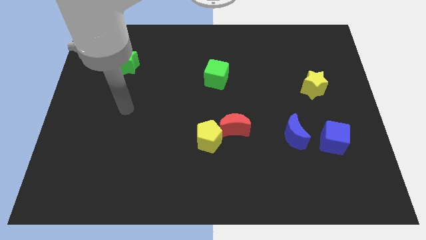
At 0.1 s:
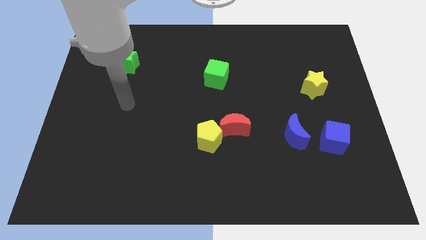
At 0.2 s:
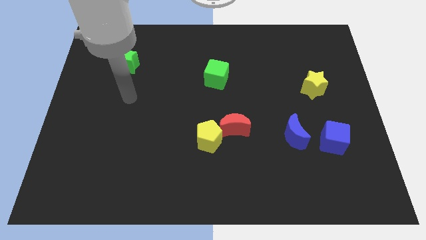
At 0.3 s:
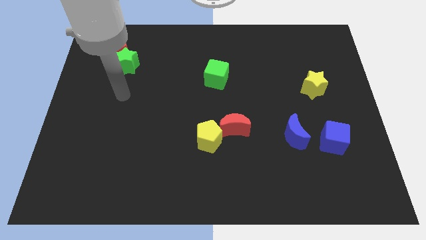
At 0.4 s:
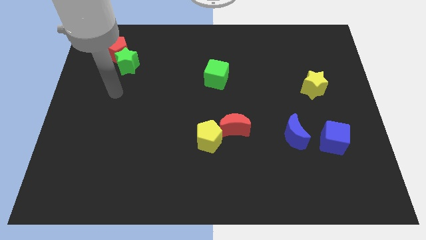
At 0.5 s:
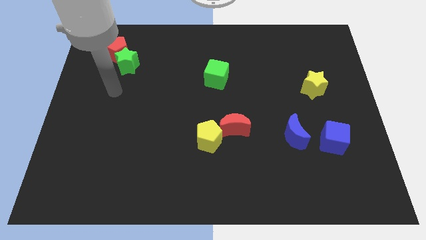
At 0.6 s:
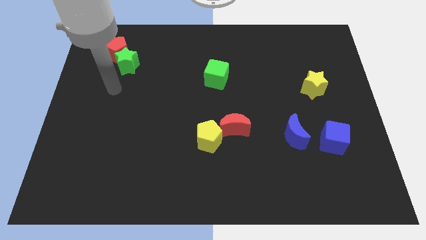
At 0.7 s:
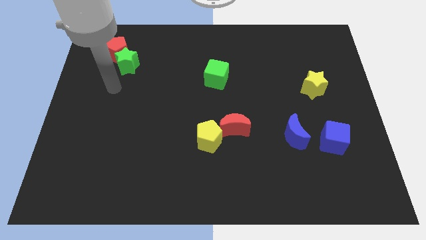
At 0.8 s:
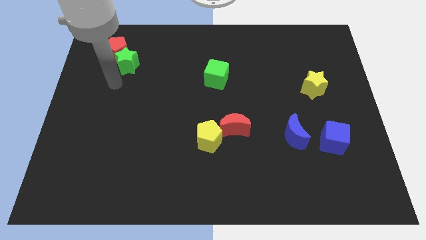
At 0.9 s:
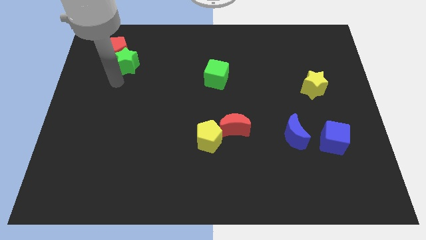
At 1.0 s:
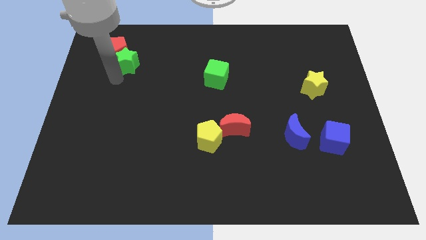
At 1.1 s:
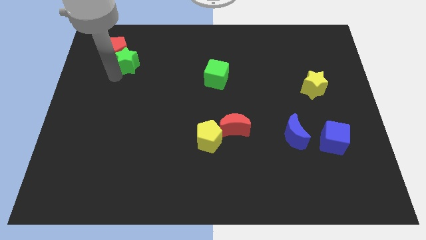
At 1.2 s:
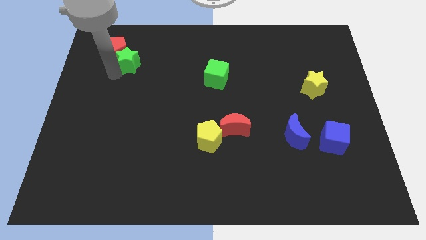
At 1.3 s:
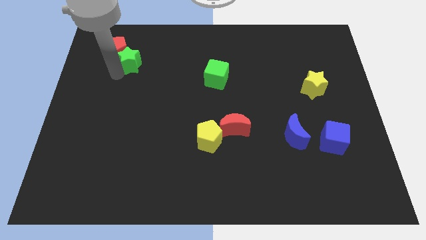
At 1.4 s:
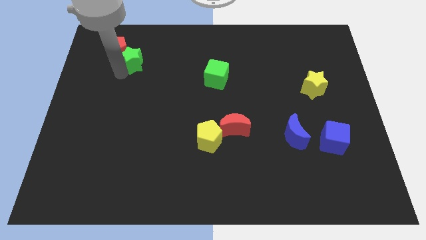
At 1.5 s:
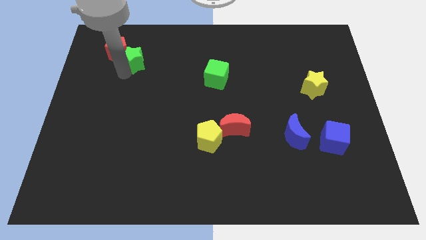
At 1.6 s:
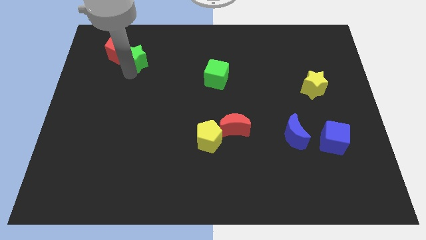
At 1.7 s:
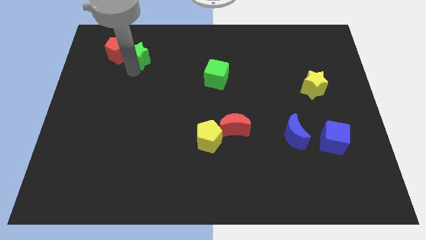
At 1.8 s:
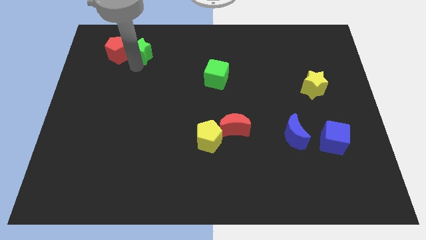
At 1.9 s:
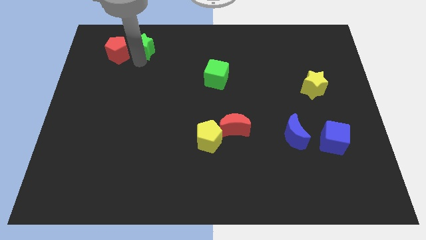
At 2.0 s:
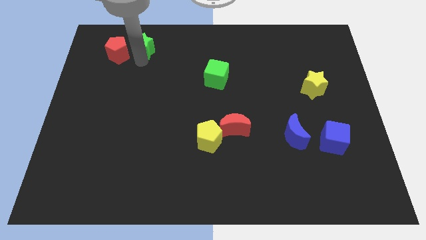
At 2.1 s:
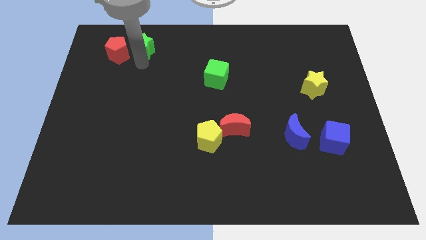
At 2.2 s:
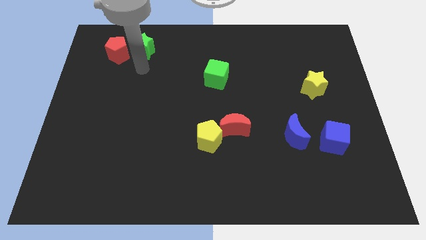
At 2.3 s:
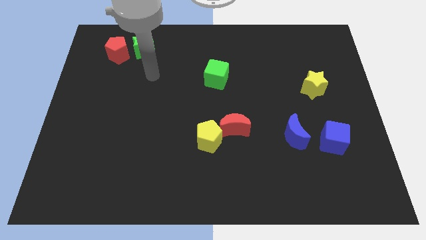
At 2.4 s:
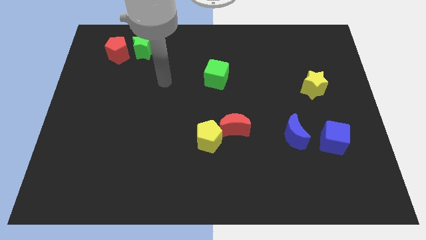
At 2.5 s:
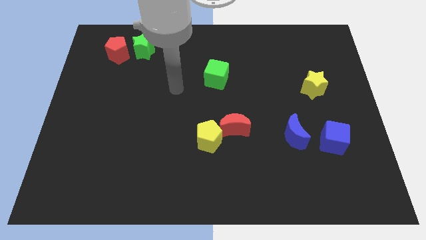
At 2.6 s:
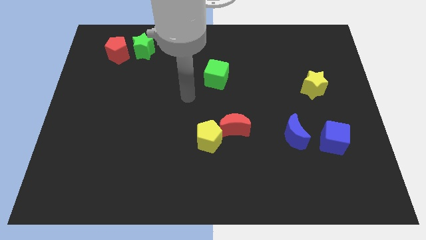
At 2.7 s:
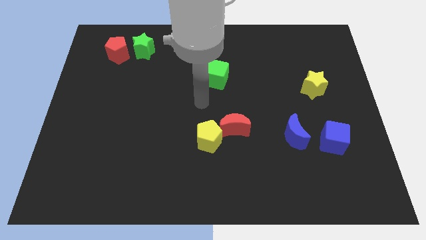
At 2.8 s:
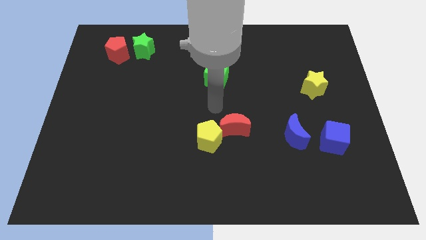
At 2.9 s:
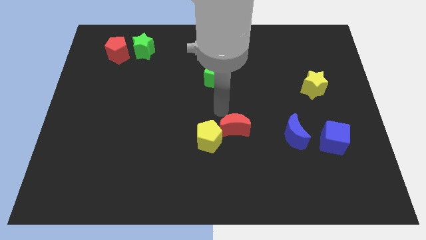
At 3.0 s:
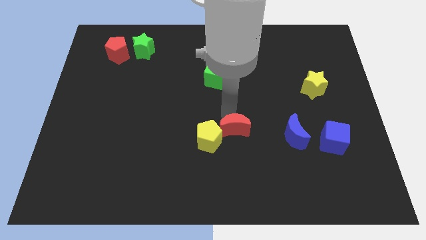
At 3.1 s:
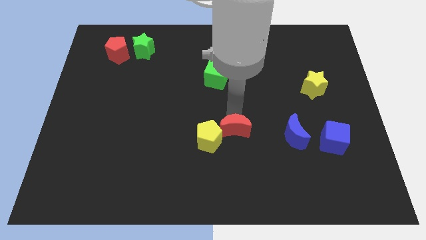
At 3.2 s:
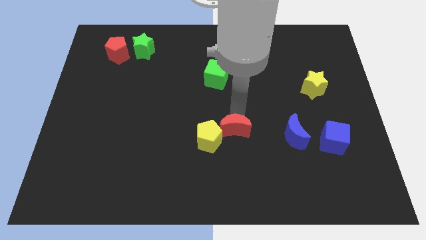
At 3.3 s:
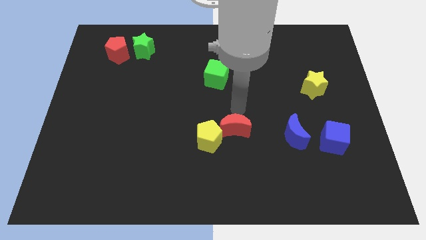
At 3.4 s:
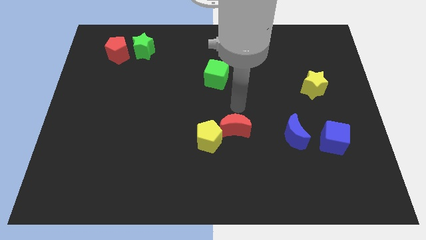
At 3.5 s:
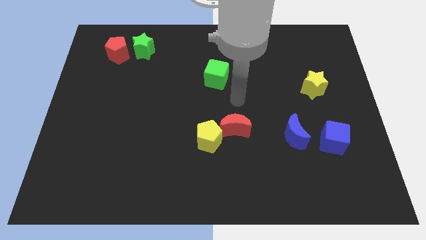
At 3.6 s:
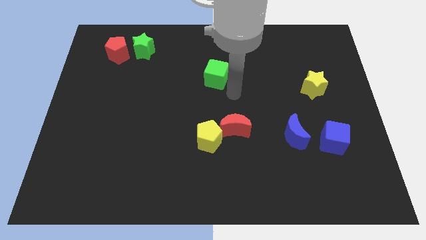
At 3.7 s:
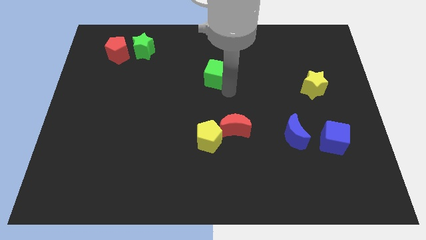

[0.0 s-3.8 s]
slide the green star towards the top of the board

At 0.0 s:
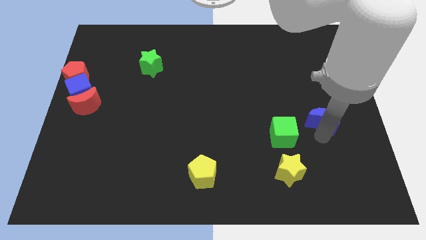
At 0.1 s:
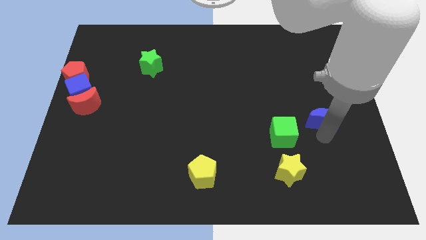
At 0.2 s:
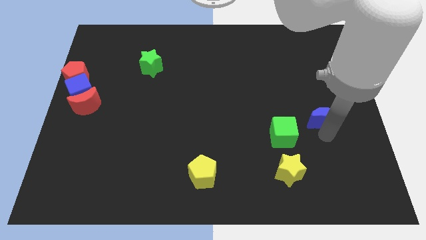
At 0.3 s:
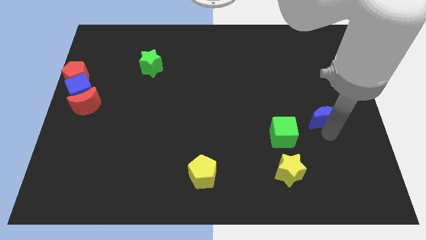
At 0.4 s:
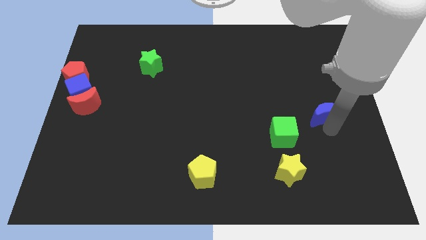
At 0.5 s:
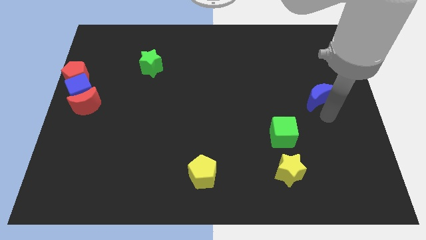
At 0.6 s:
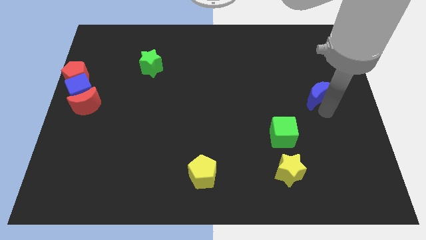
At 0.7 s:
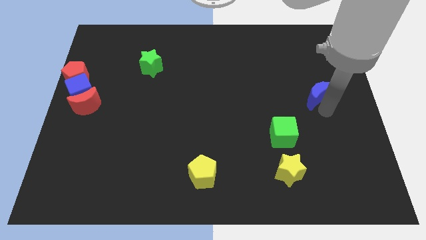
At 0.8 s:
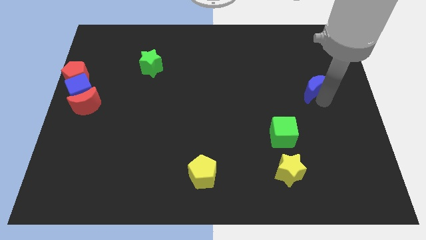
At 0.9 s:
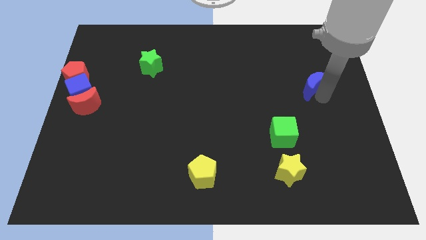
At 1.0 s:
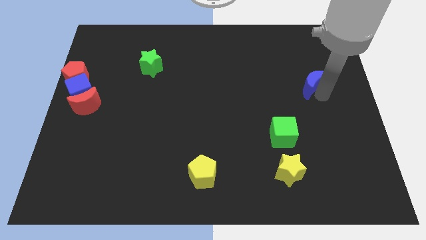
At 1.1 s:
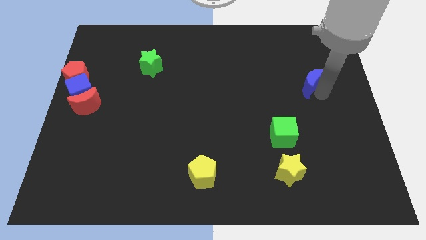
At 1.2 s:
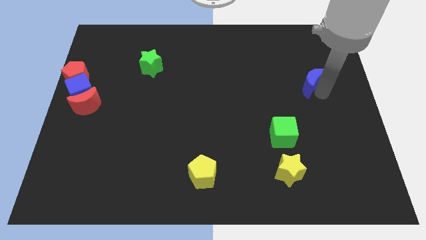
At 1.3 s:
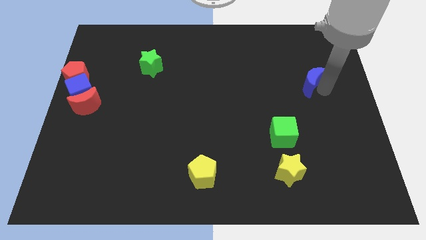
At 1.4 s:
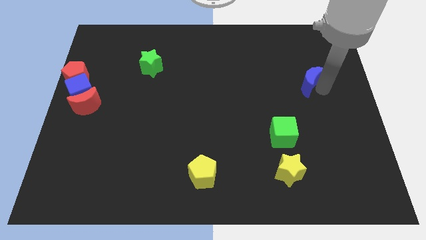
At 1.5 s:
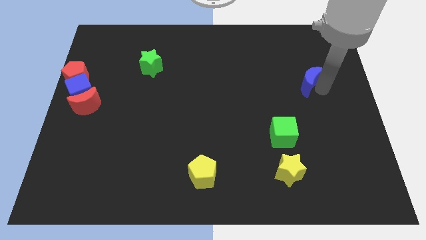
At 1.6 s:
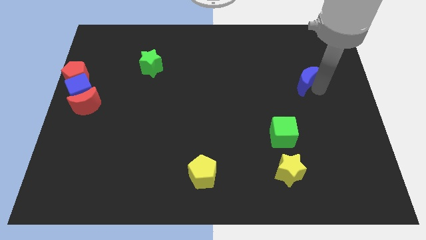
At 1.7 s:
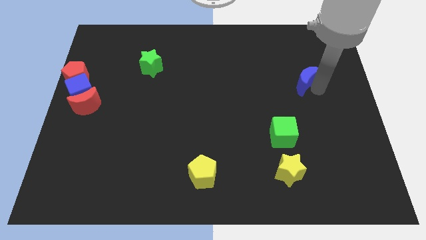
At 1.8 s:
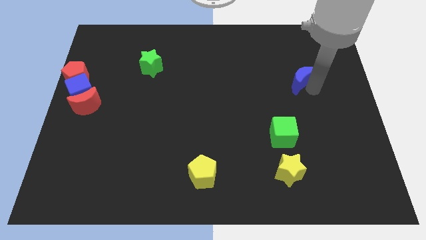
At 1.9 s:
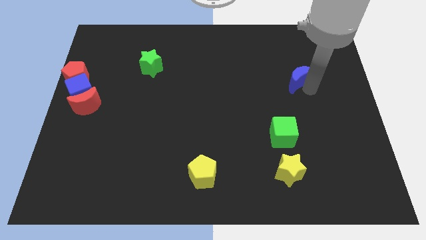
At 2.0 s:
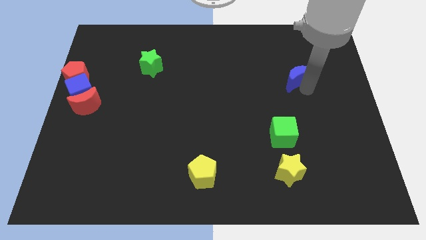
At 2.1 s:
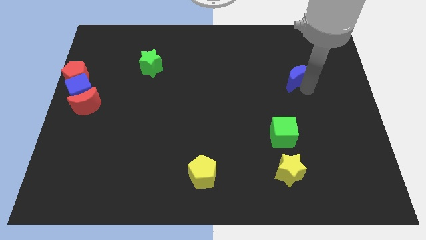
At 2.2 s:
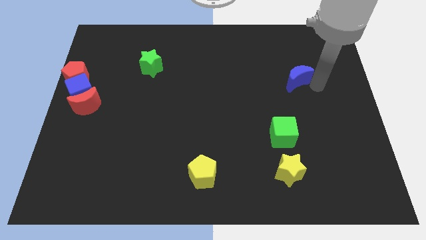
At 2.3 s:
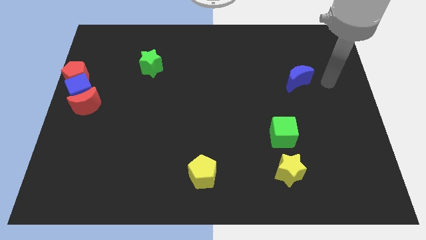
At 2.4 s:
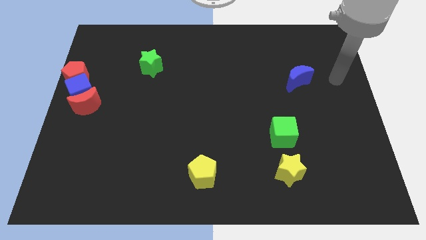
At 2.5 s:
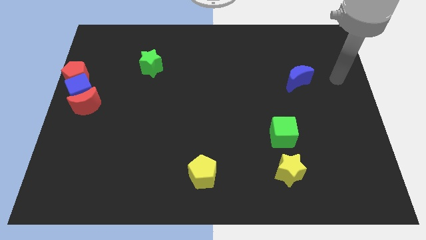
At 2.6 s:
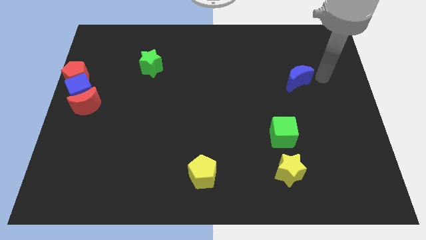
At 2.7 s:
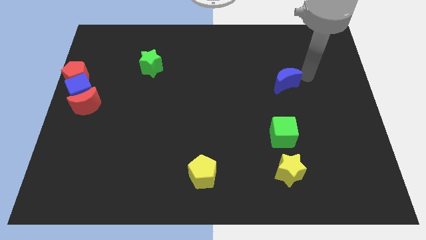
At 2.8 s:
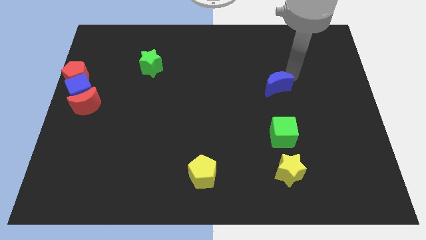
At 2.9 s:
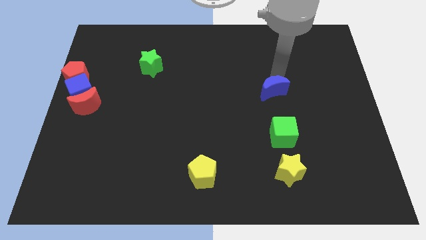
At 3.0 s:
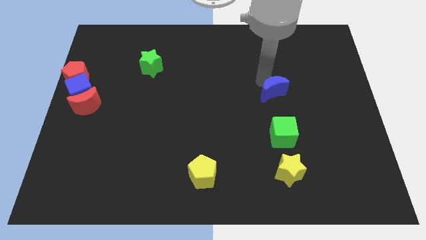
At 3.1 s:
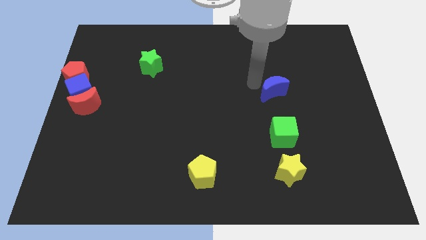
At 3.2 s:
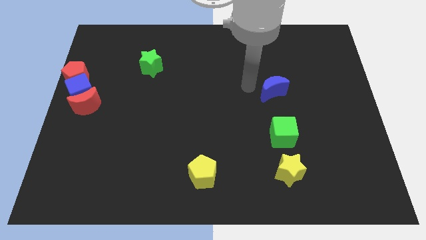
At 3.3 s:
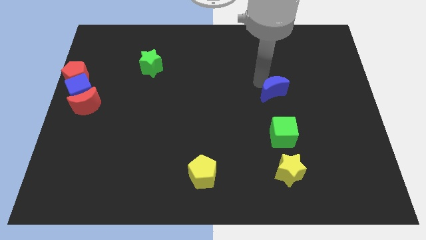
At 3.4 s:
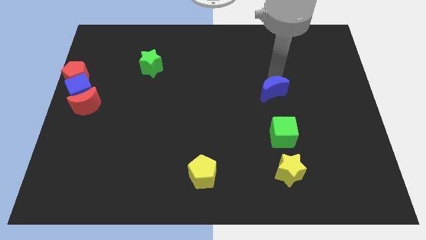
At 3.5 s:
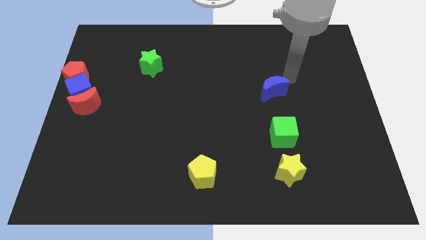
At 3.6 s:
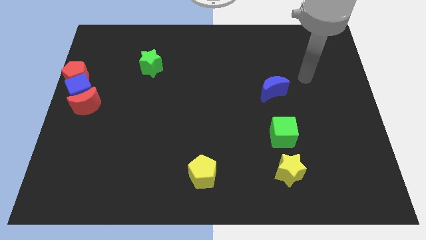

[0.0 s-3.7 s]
put the blue moon parallel to red moon

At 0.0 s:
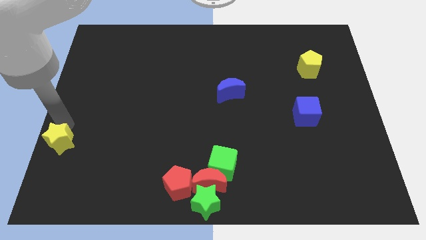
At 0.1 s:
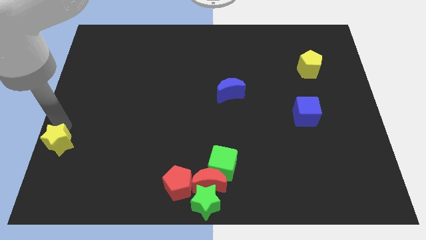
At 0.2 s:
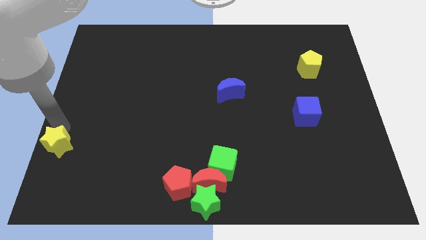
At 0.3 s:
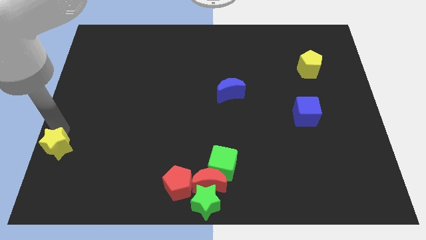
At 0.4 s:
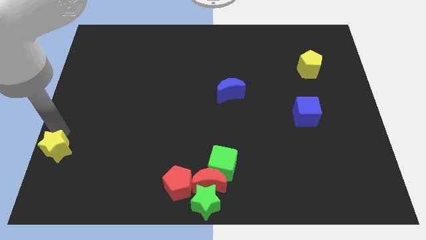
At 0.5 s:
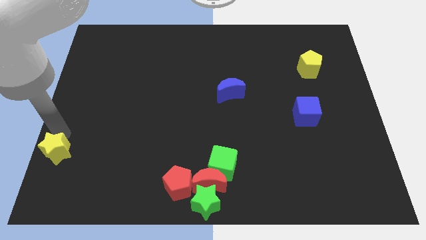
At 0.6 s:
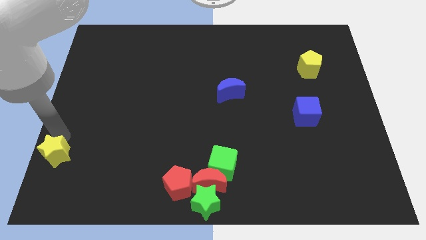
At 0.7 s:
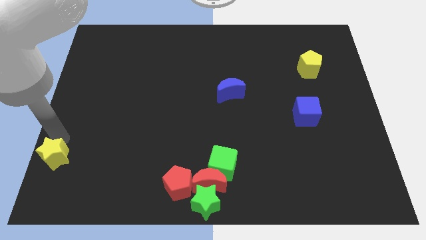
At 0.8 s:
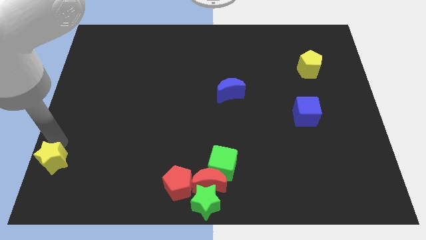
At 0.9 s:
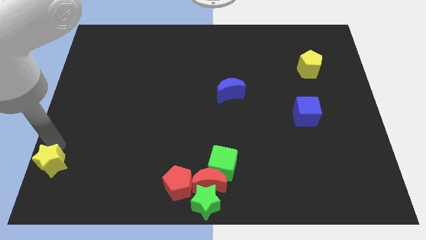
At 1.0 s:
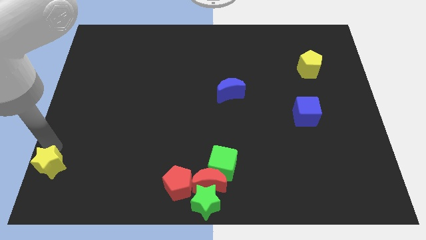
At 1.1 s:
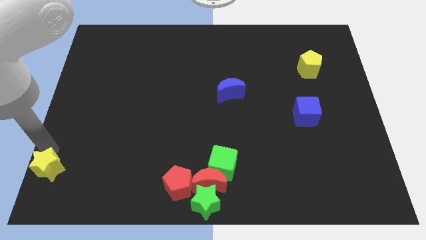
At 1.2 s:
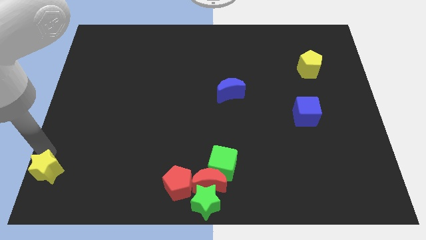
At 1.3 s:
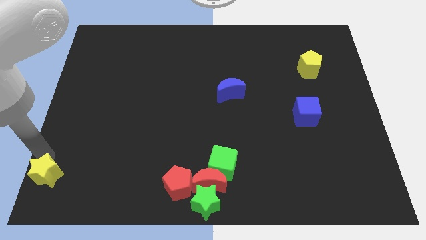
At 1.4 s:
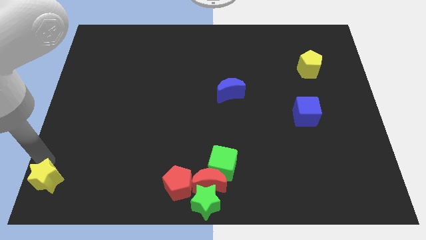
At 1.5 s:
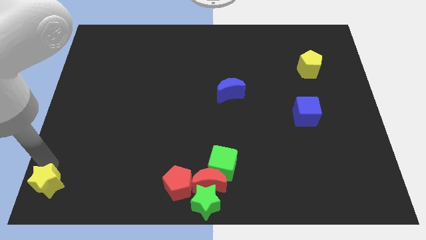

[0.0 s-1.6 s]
push the yellow star slightly downwards
